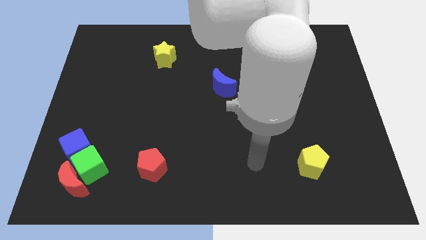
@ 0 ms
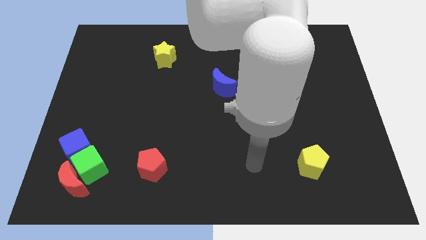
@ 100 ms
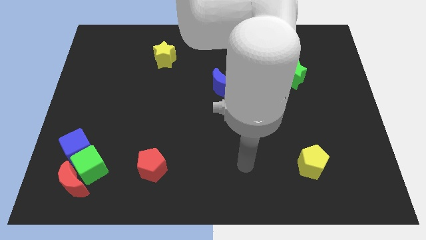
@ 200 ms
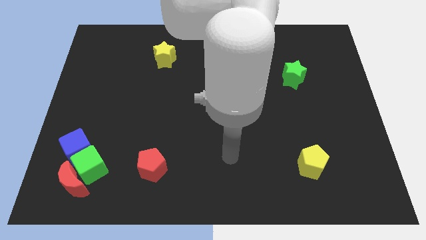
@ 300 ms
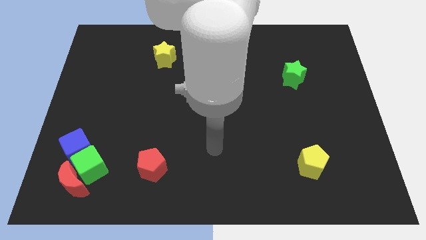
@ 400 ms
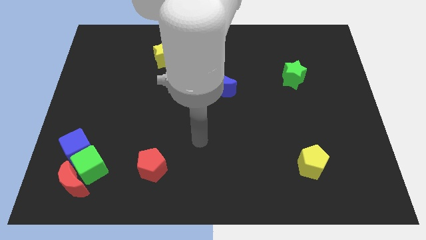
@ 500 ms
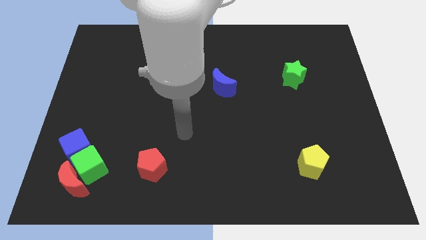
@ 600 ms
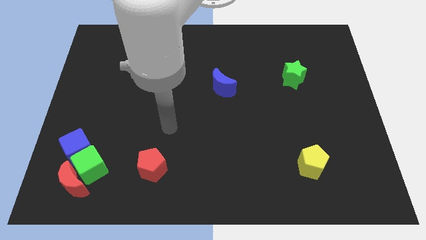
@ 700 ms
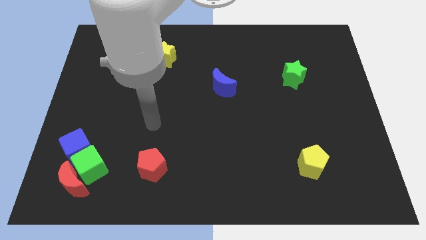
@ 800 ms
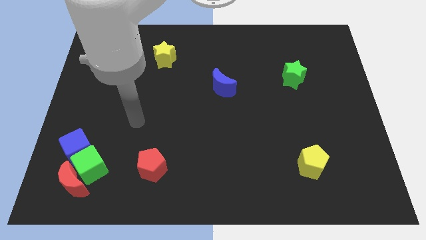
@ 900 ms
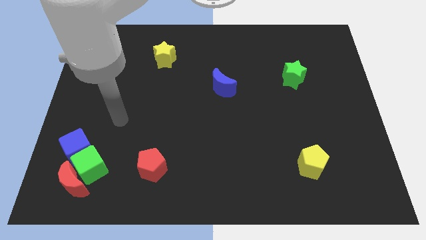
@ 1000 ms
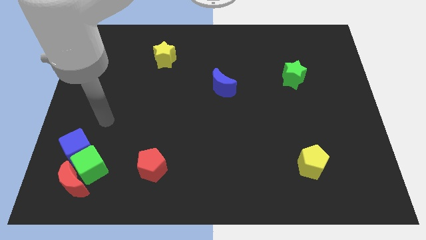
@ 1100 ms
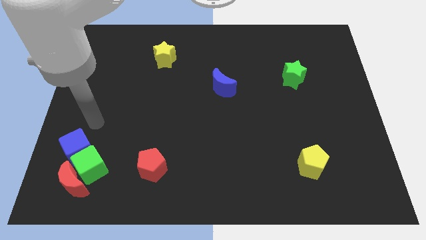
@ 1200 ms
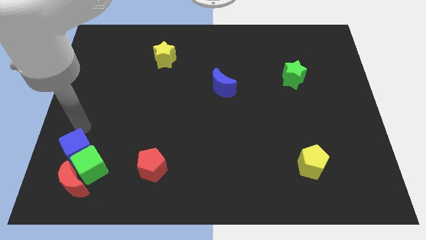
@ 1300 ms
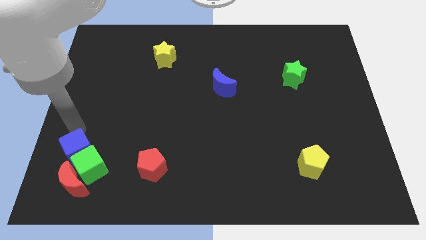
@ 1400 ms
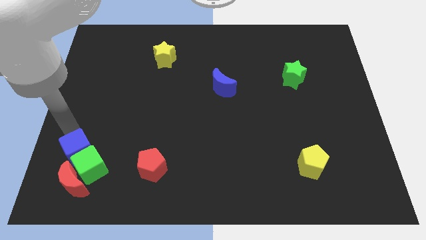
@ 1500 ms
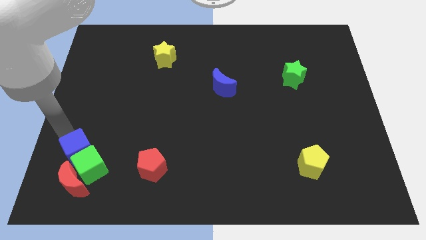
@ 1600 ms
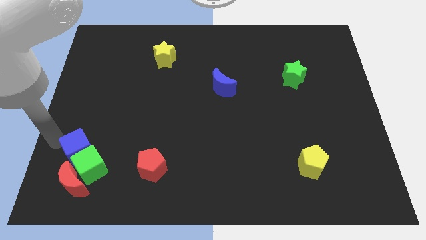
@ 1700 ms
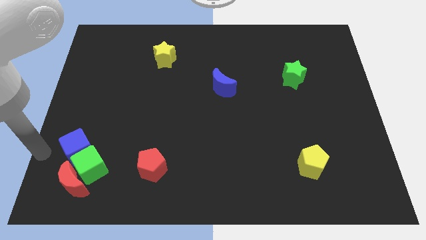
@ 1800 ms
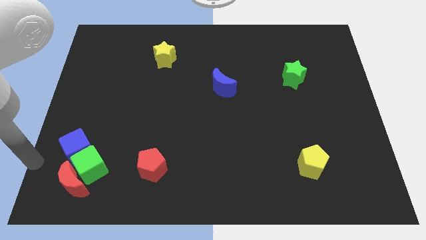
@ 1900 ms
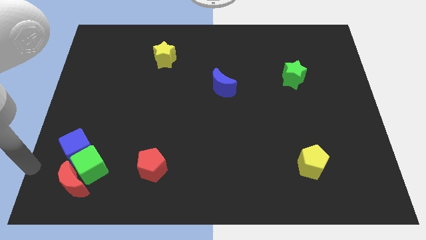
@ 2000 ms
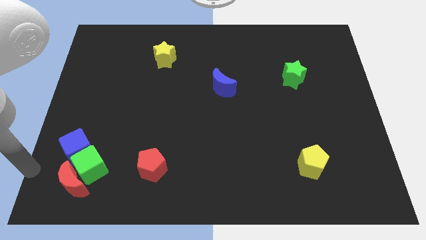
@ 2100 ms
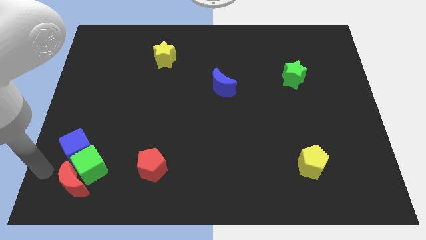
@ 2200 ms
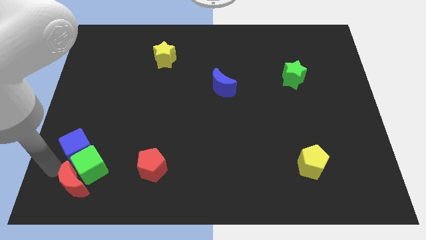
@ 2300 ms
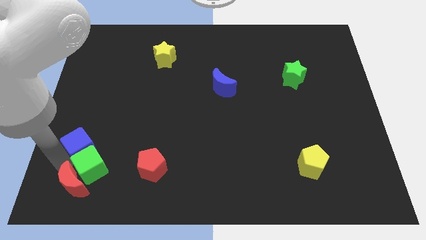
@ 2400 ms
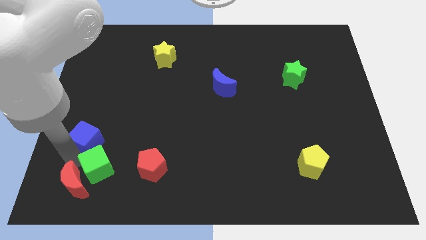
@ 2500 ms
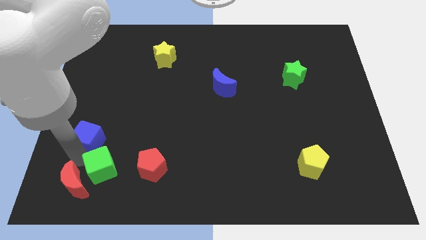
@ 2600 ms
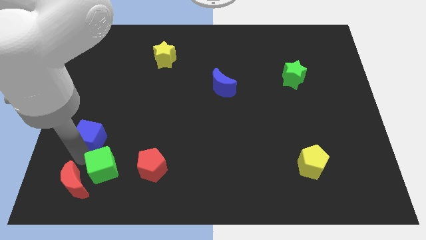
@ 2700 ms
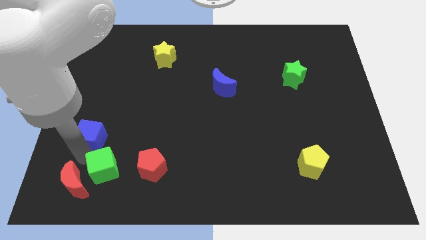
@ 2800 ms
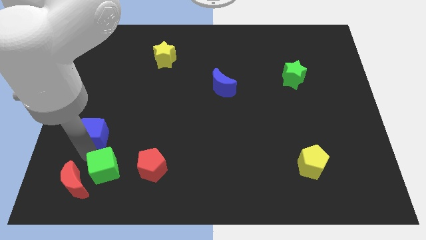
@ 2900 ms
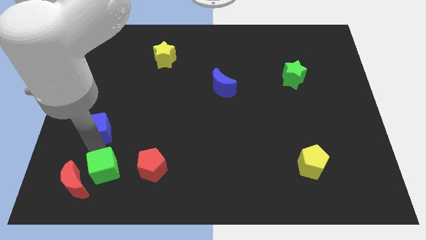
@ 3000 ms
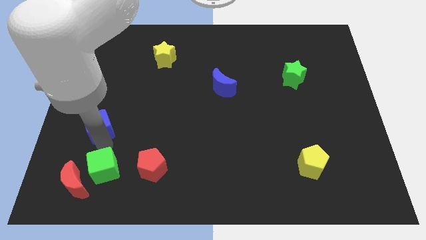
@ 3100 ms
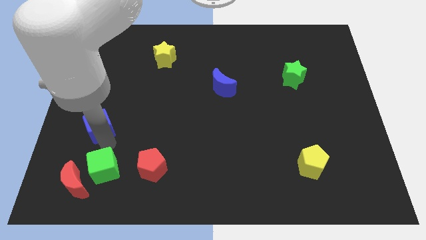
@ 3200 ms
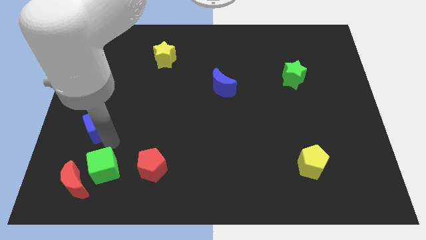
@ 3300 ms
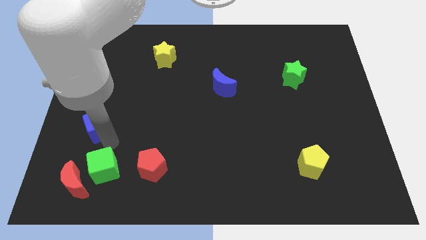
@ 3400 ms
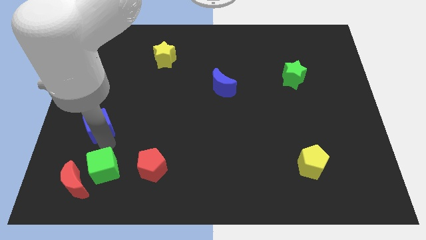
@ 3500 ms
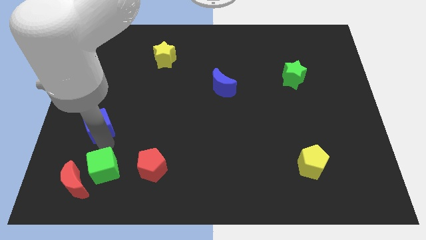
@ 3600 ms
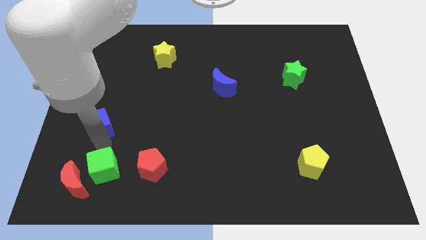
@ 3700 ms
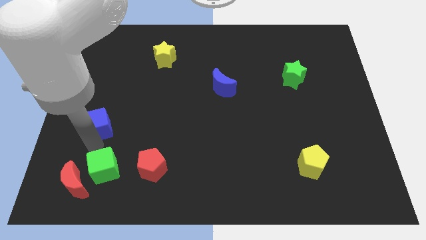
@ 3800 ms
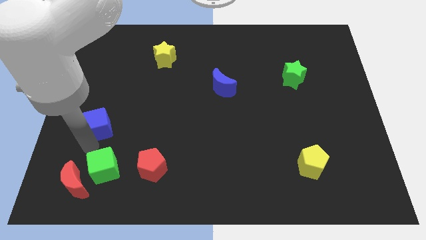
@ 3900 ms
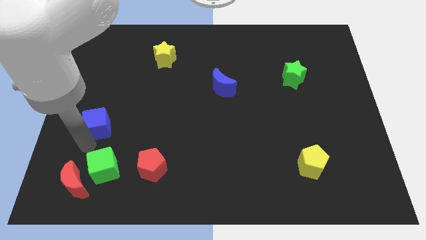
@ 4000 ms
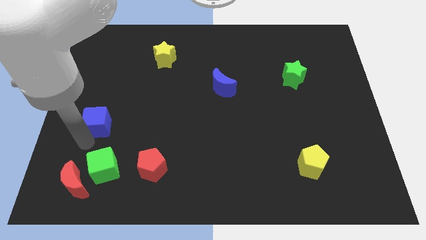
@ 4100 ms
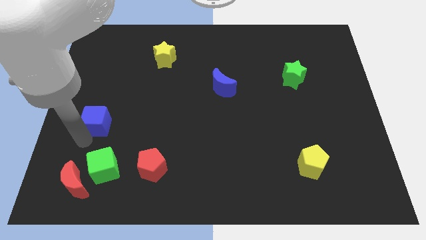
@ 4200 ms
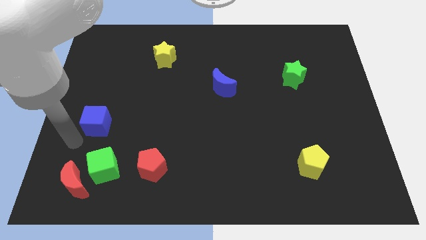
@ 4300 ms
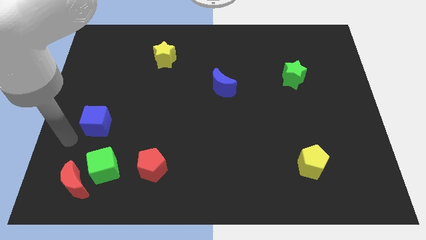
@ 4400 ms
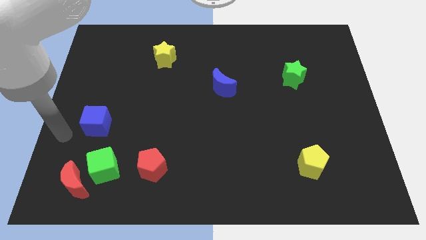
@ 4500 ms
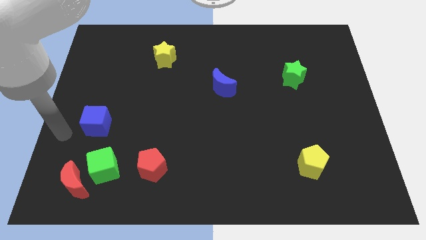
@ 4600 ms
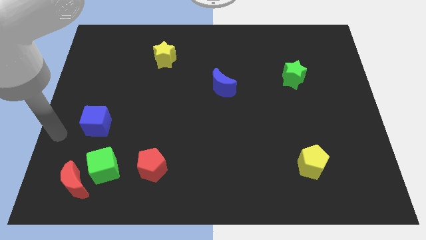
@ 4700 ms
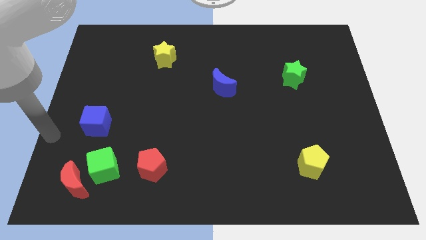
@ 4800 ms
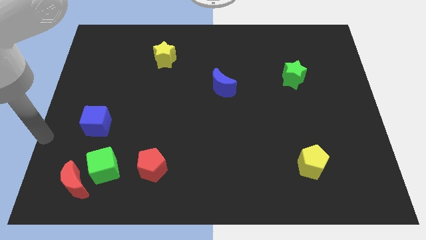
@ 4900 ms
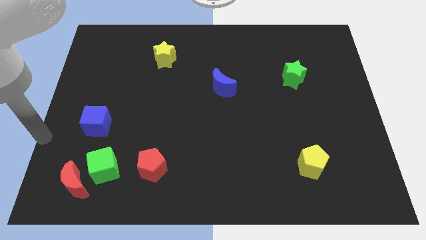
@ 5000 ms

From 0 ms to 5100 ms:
separate green cube and blue cube

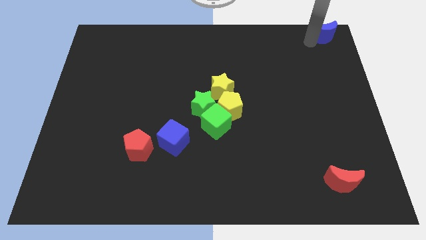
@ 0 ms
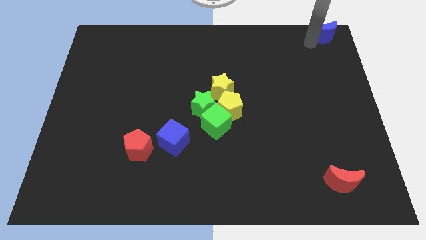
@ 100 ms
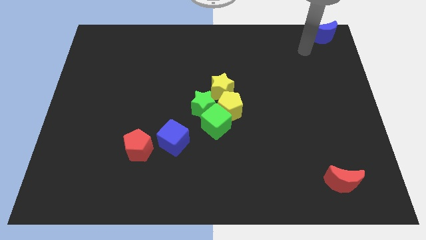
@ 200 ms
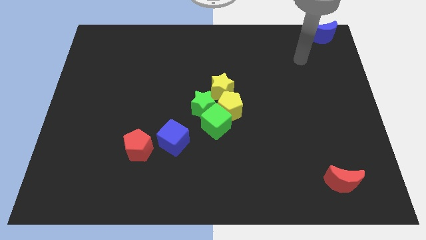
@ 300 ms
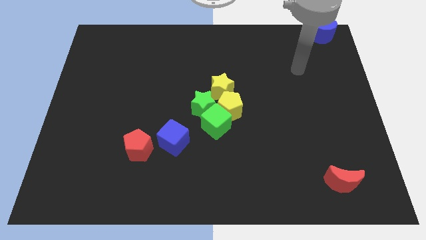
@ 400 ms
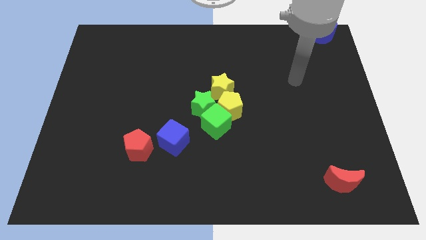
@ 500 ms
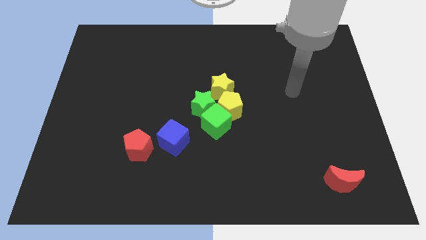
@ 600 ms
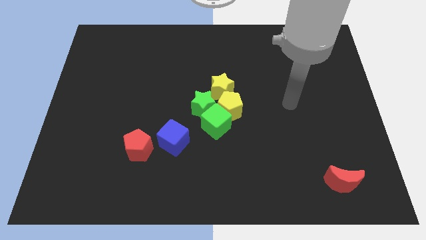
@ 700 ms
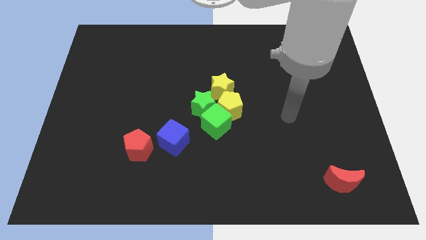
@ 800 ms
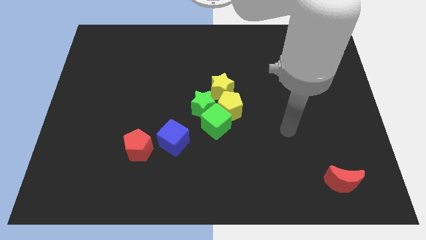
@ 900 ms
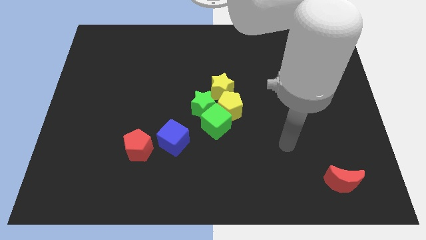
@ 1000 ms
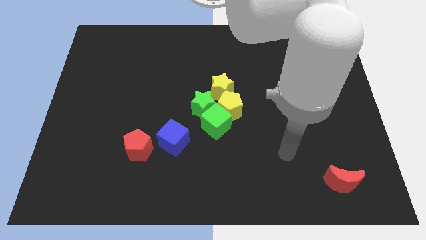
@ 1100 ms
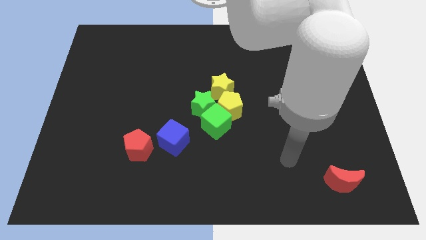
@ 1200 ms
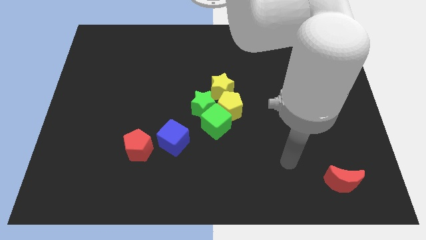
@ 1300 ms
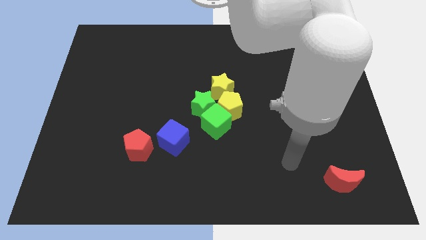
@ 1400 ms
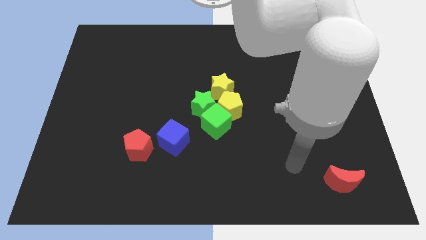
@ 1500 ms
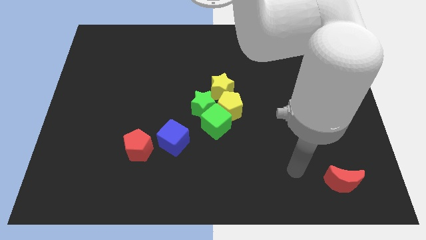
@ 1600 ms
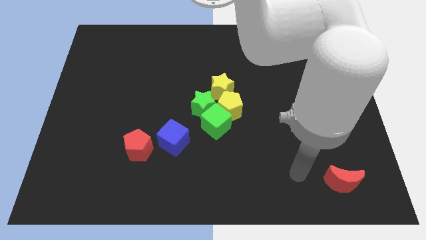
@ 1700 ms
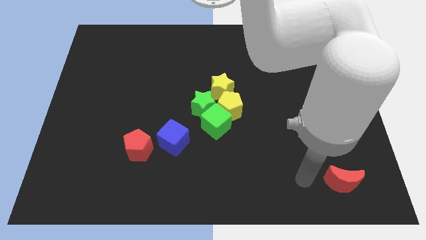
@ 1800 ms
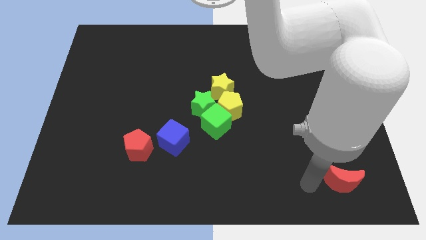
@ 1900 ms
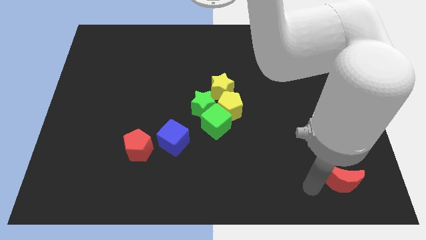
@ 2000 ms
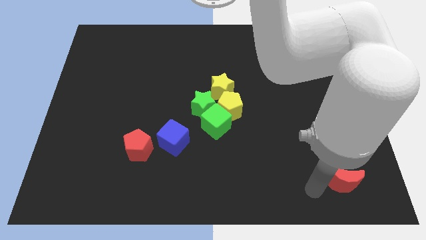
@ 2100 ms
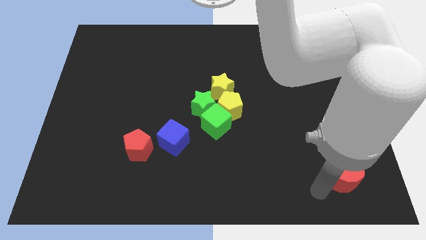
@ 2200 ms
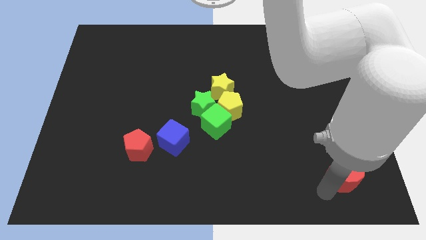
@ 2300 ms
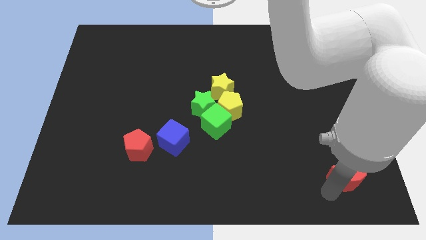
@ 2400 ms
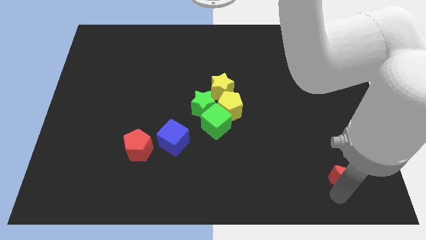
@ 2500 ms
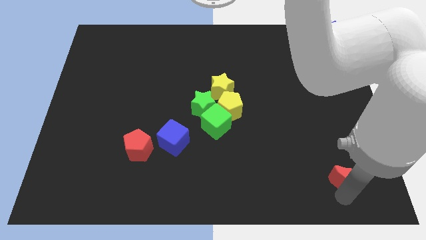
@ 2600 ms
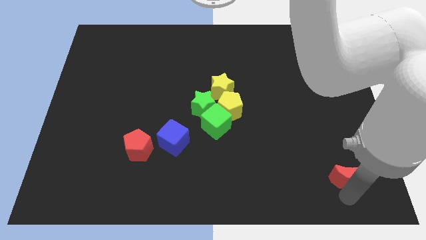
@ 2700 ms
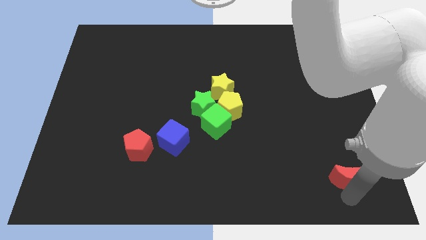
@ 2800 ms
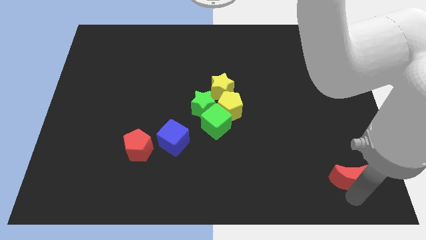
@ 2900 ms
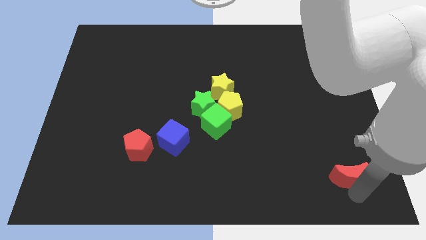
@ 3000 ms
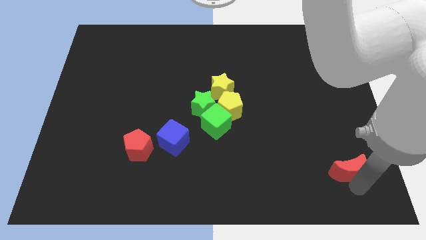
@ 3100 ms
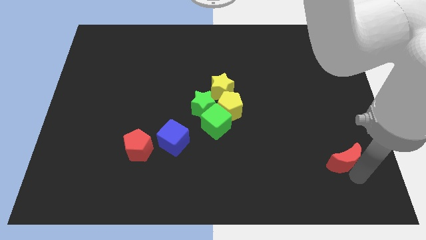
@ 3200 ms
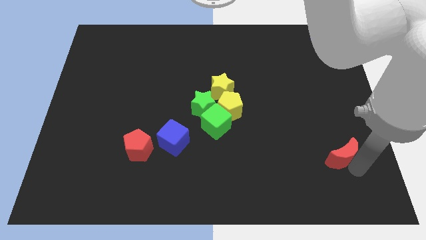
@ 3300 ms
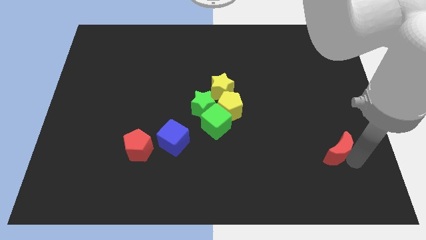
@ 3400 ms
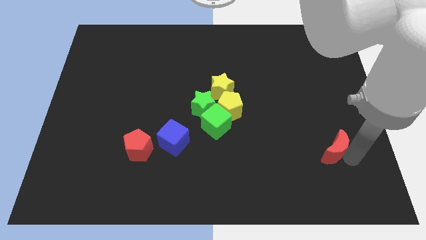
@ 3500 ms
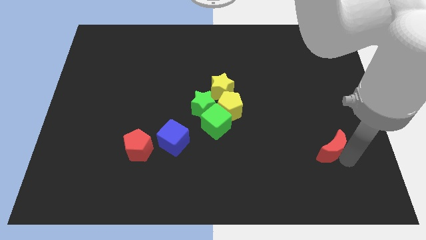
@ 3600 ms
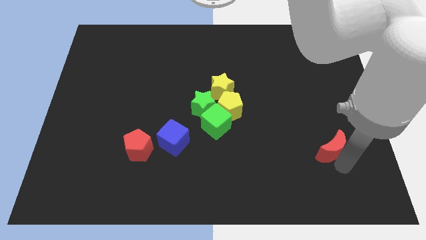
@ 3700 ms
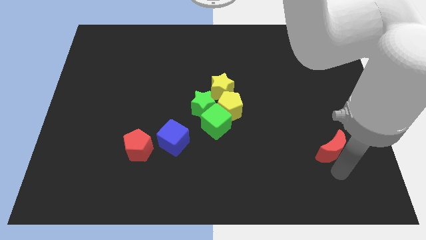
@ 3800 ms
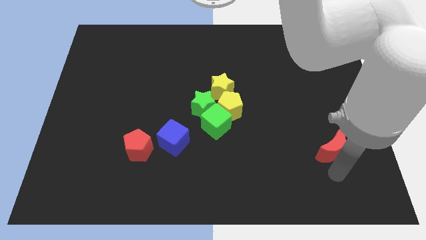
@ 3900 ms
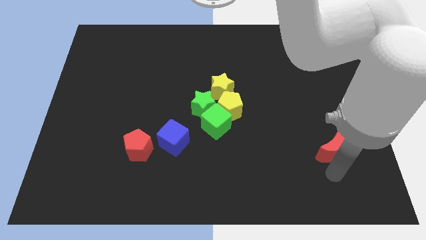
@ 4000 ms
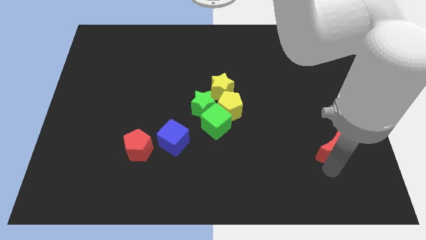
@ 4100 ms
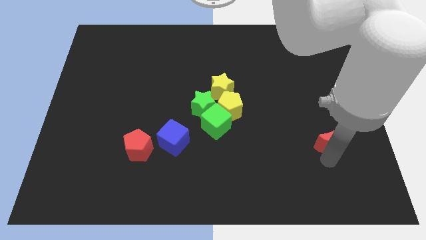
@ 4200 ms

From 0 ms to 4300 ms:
push the red crescent slightly top
